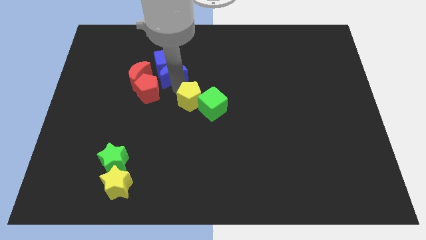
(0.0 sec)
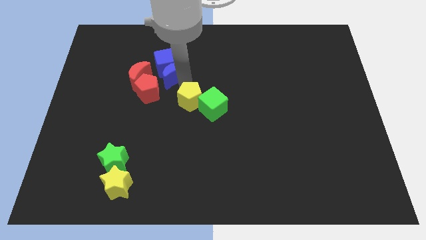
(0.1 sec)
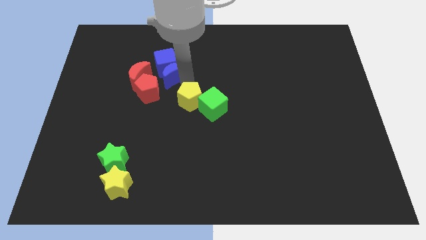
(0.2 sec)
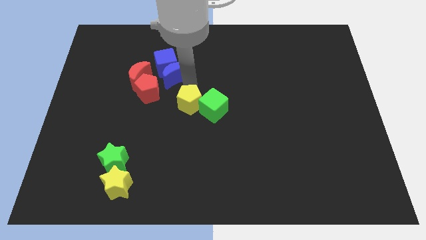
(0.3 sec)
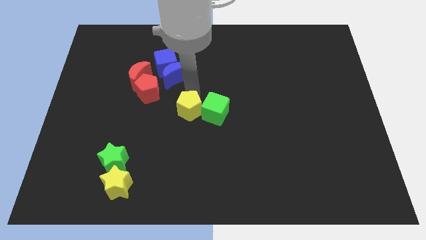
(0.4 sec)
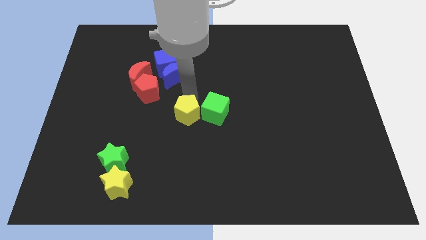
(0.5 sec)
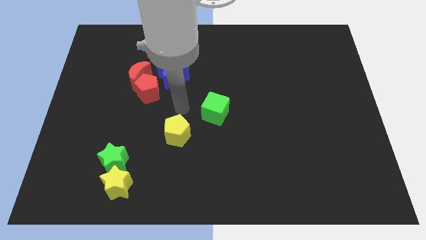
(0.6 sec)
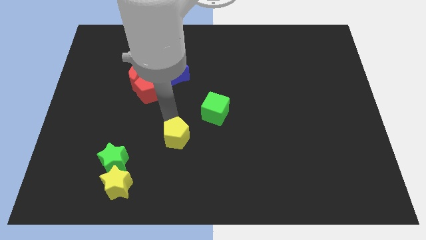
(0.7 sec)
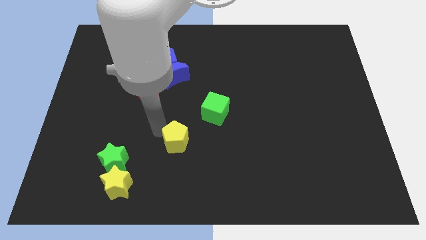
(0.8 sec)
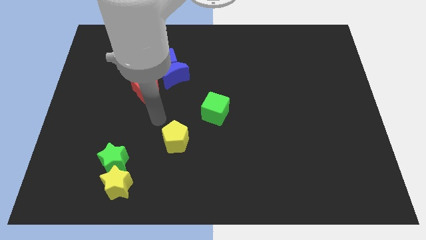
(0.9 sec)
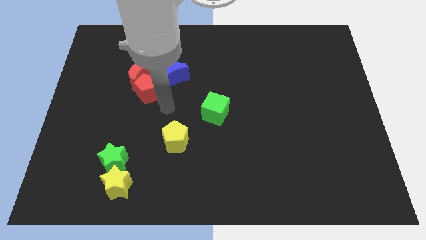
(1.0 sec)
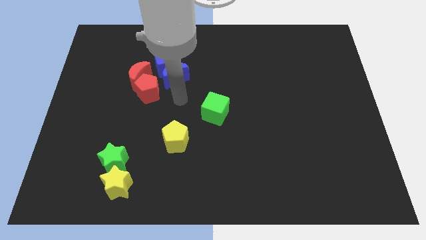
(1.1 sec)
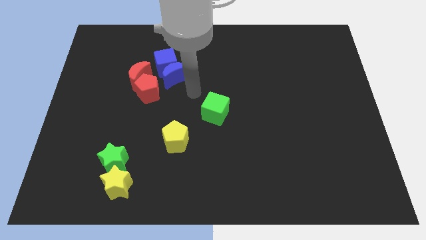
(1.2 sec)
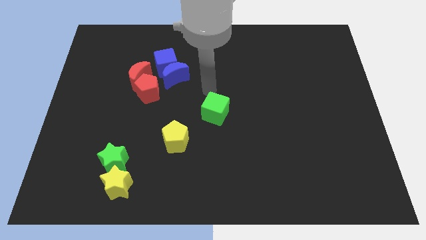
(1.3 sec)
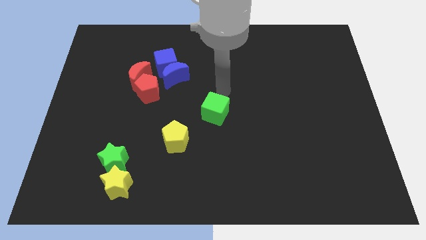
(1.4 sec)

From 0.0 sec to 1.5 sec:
push the yellow pentagon away from the green cube

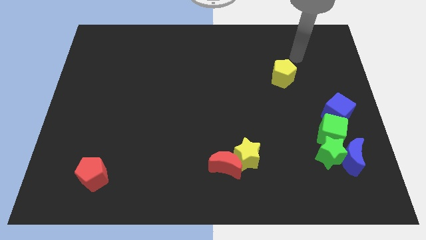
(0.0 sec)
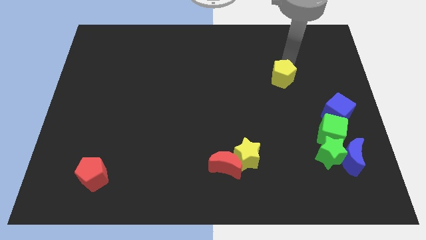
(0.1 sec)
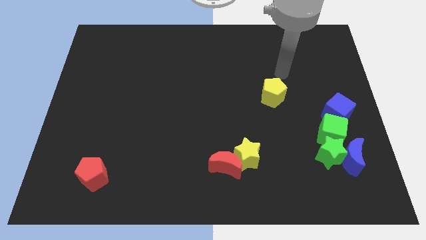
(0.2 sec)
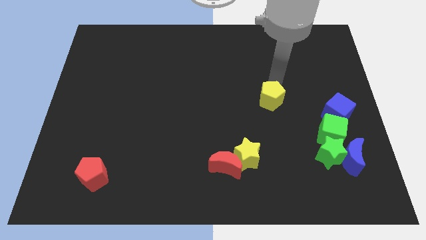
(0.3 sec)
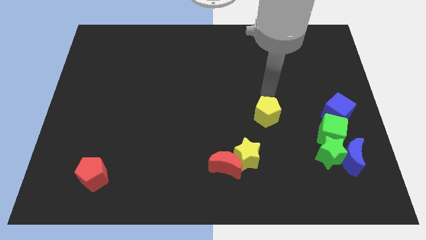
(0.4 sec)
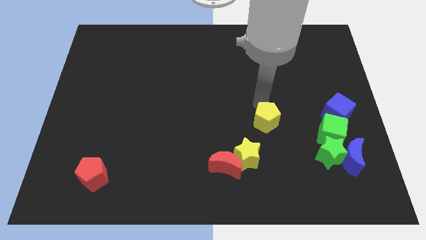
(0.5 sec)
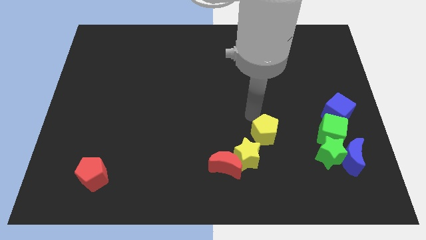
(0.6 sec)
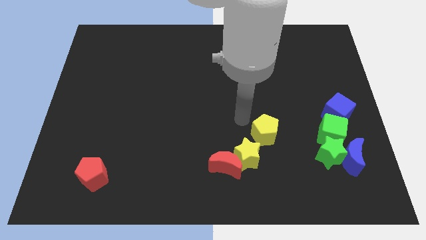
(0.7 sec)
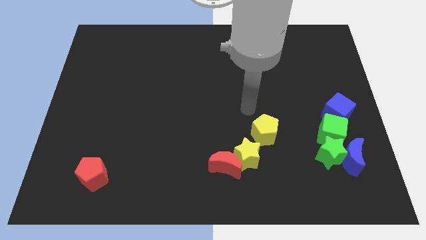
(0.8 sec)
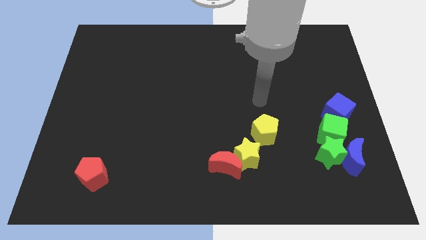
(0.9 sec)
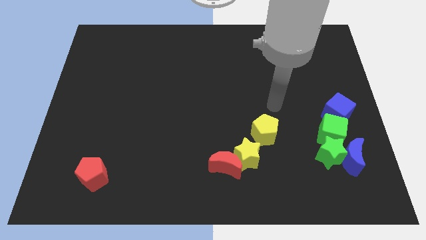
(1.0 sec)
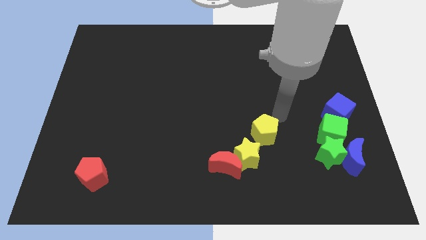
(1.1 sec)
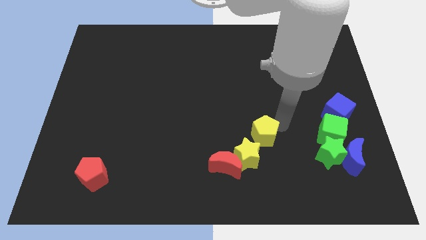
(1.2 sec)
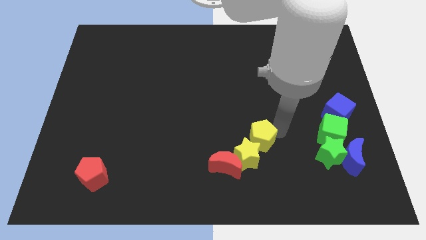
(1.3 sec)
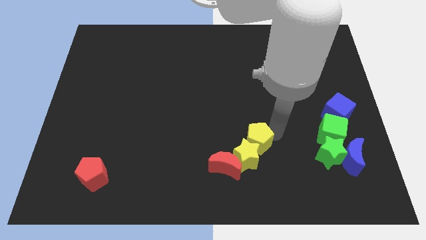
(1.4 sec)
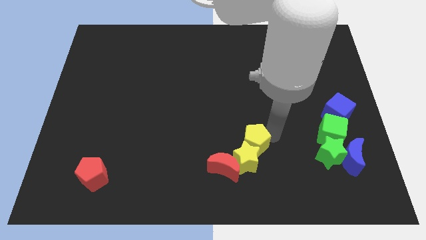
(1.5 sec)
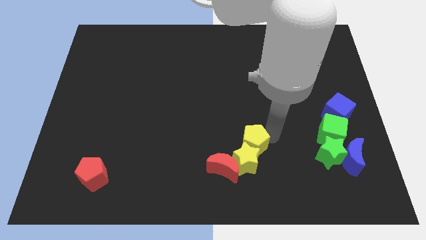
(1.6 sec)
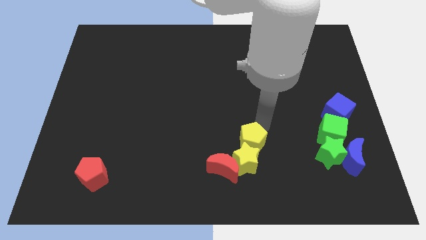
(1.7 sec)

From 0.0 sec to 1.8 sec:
move the yellow pentagon into the yellow star

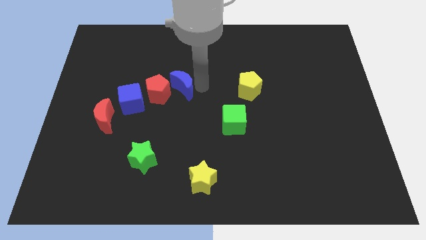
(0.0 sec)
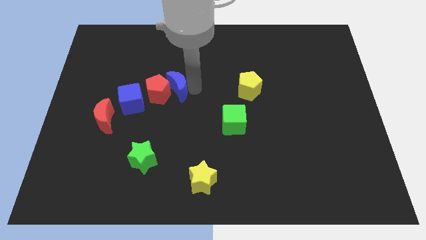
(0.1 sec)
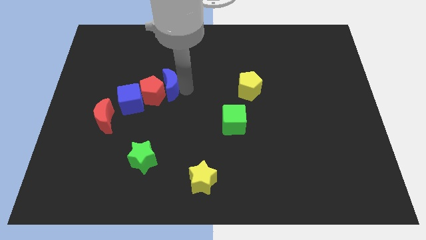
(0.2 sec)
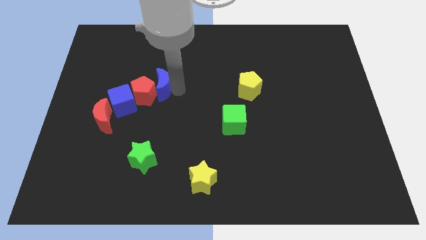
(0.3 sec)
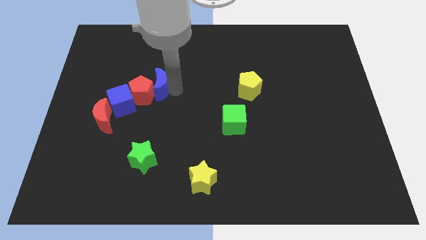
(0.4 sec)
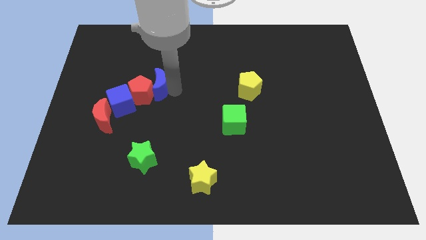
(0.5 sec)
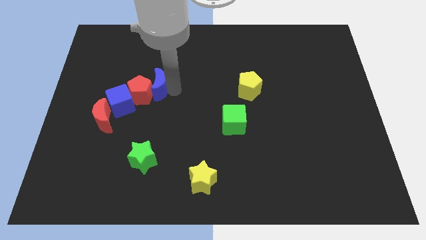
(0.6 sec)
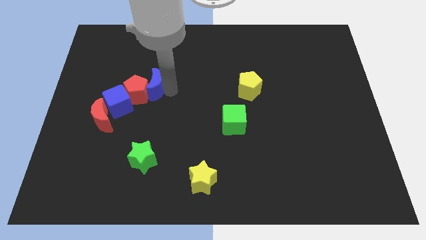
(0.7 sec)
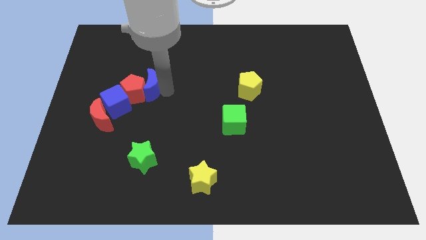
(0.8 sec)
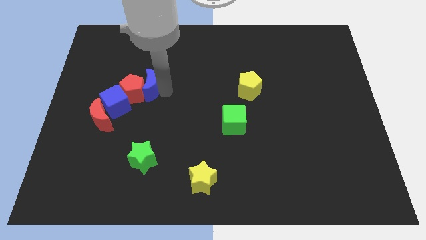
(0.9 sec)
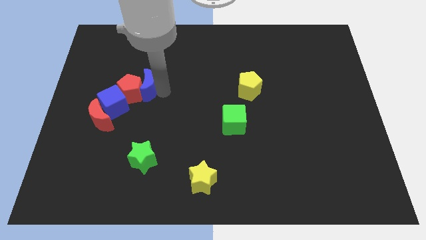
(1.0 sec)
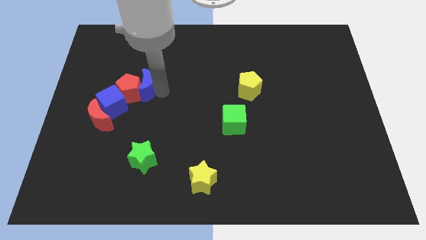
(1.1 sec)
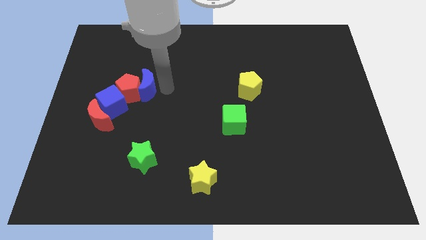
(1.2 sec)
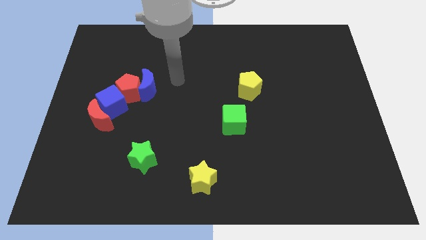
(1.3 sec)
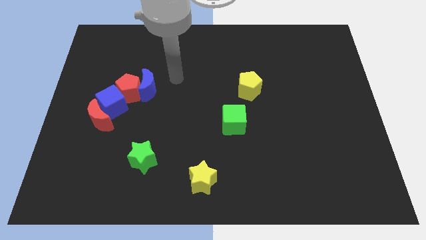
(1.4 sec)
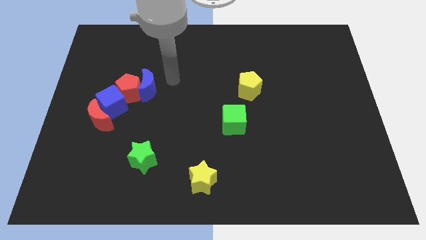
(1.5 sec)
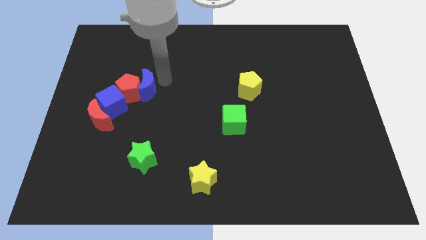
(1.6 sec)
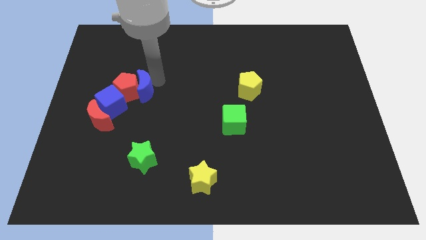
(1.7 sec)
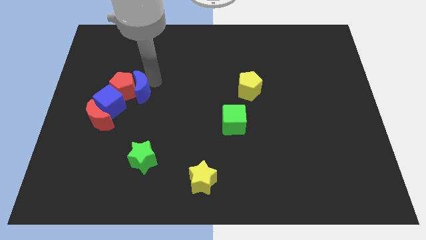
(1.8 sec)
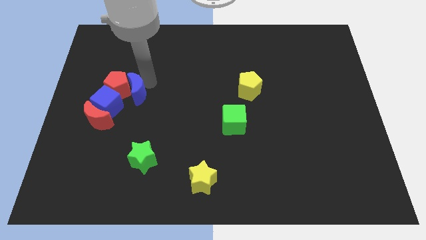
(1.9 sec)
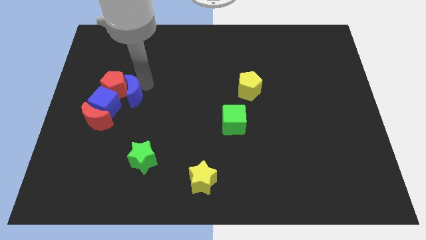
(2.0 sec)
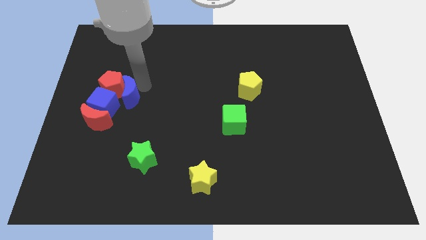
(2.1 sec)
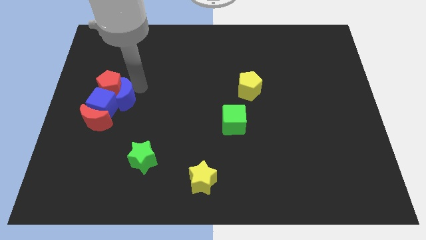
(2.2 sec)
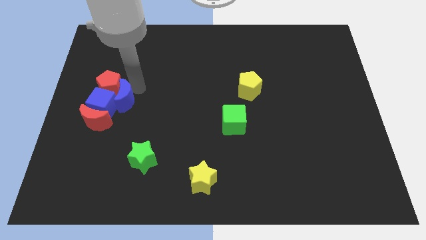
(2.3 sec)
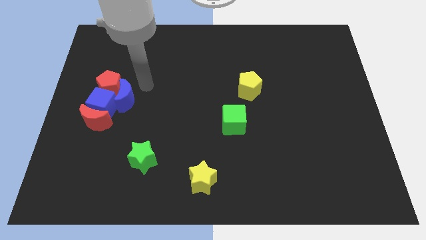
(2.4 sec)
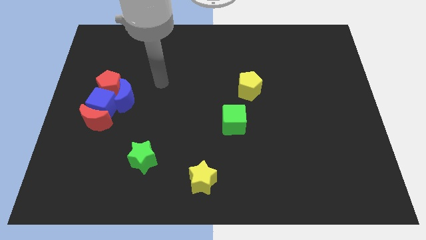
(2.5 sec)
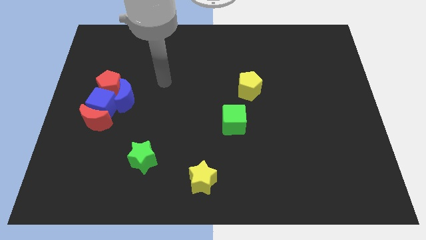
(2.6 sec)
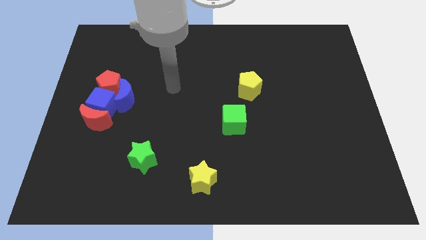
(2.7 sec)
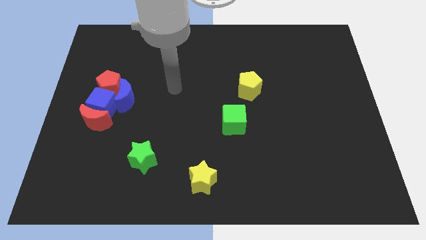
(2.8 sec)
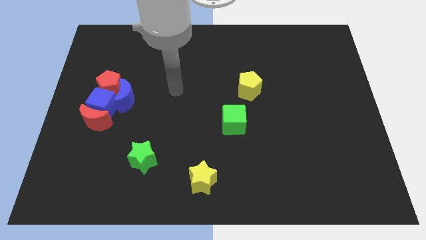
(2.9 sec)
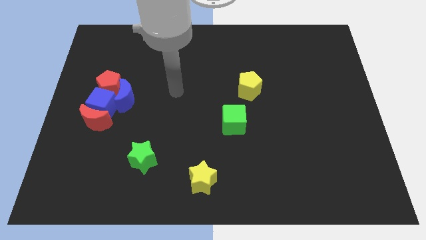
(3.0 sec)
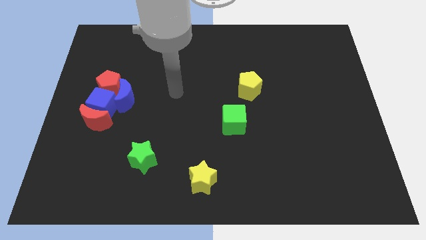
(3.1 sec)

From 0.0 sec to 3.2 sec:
push the blue moon into the group of blocks

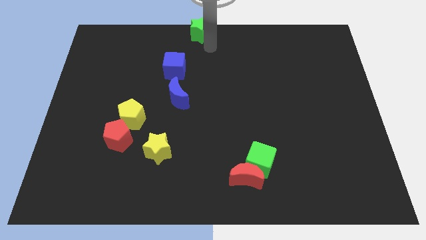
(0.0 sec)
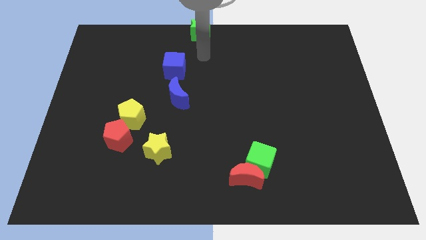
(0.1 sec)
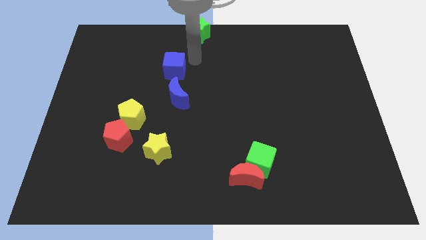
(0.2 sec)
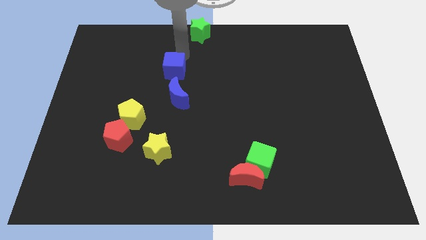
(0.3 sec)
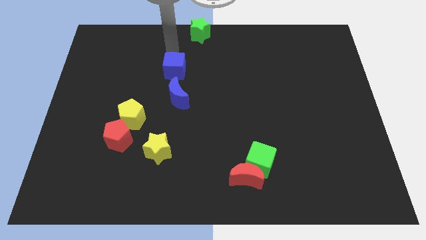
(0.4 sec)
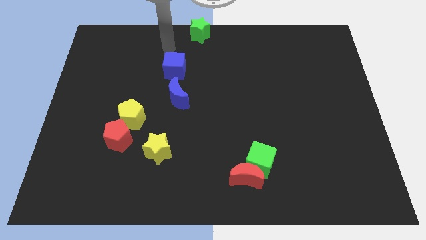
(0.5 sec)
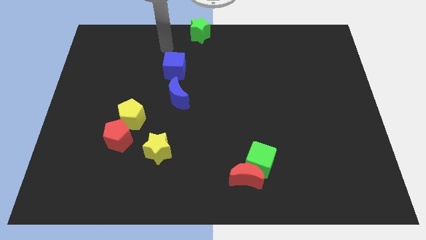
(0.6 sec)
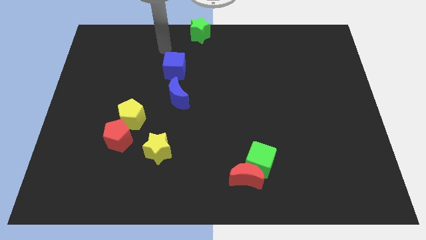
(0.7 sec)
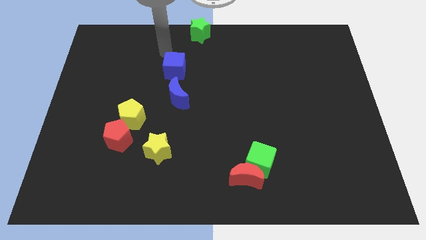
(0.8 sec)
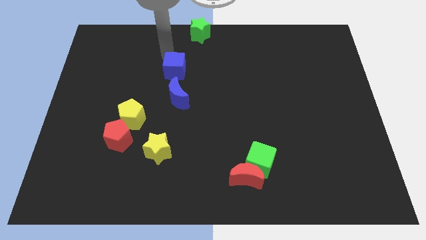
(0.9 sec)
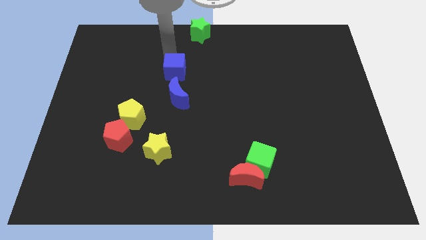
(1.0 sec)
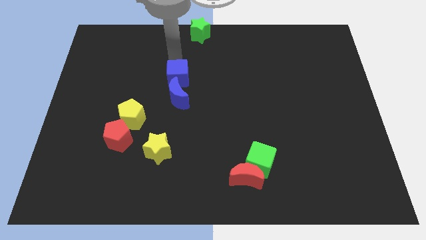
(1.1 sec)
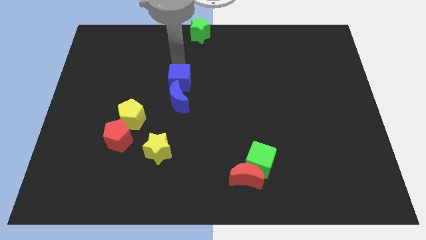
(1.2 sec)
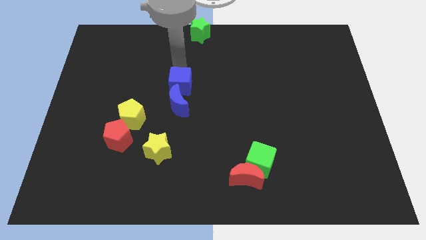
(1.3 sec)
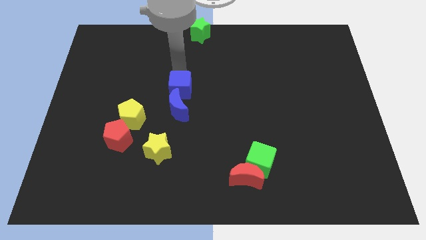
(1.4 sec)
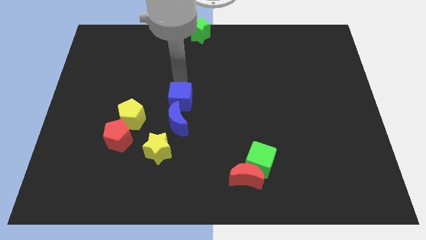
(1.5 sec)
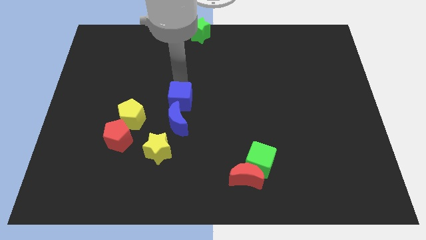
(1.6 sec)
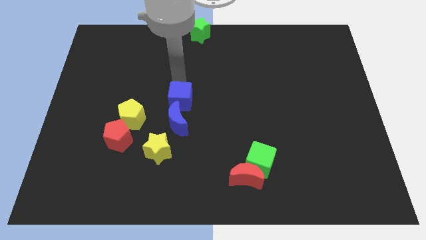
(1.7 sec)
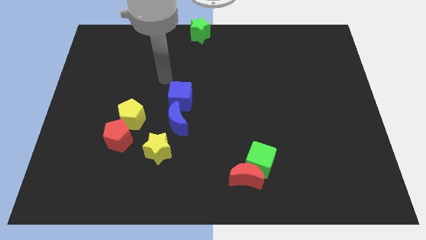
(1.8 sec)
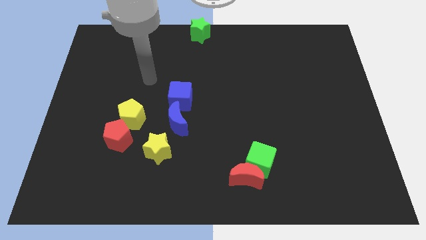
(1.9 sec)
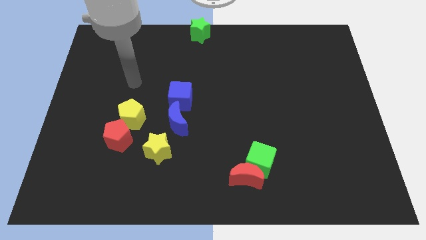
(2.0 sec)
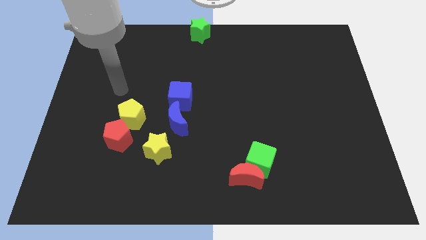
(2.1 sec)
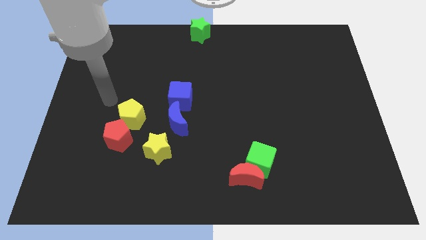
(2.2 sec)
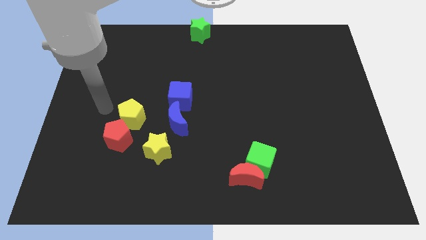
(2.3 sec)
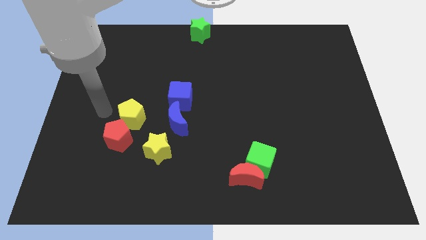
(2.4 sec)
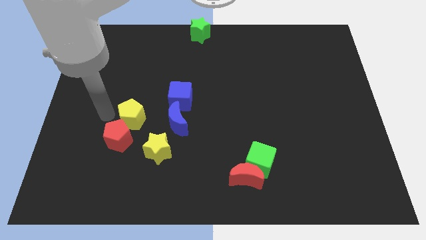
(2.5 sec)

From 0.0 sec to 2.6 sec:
place the blue cube and blue moon at the center of the board
